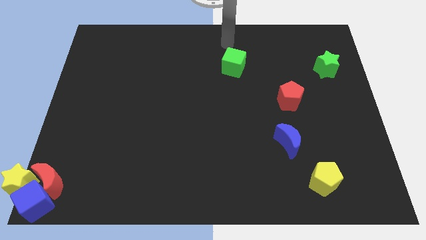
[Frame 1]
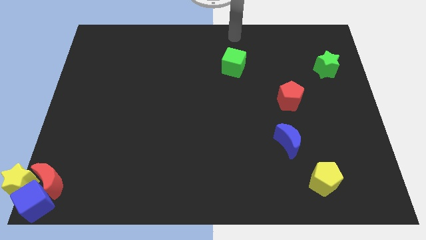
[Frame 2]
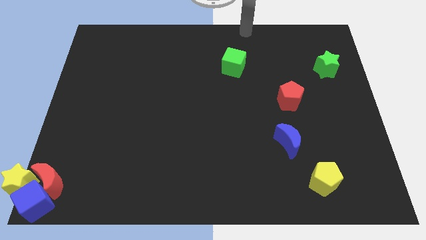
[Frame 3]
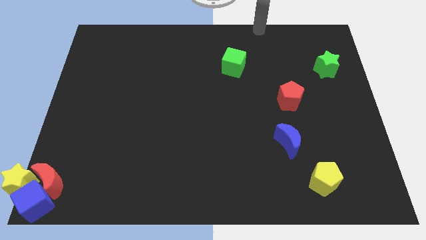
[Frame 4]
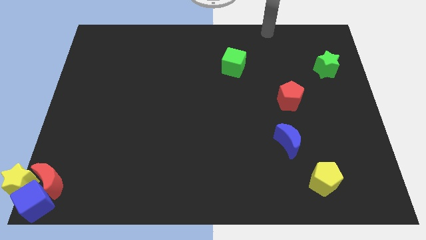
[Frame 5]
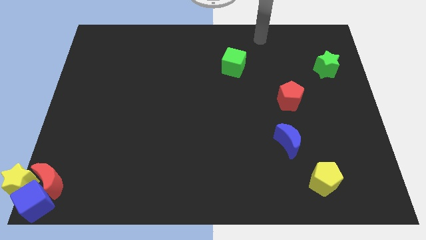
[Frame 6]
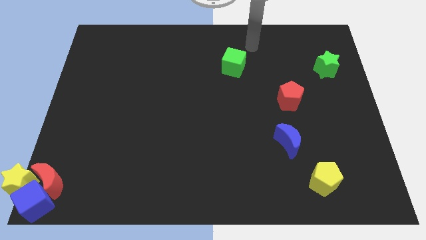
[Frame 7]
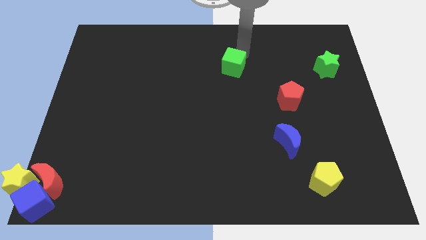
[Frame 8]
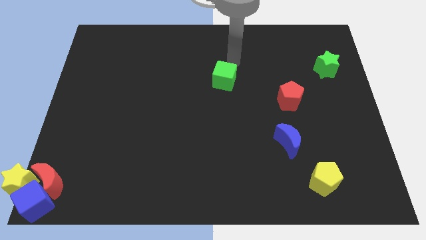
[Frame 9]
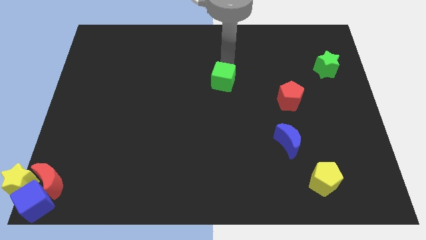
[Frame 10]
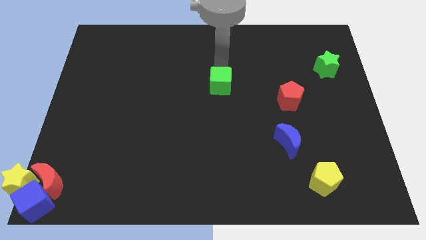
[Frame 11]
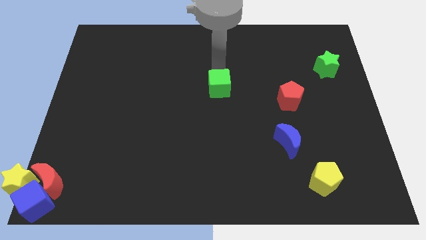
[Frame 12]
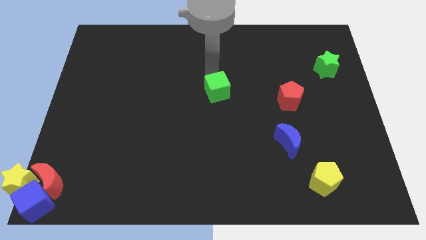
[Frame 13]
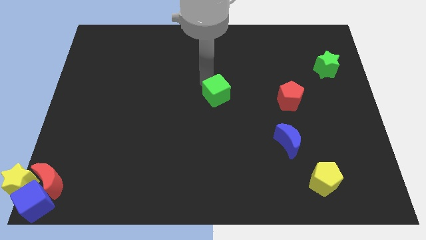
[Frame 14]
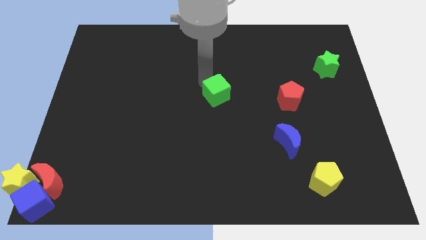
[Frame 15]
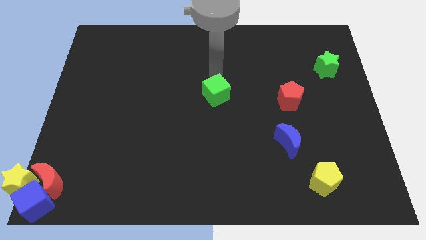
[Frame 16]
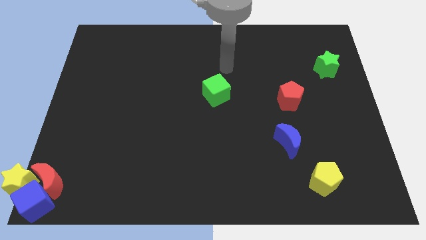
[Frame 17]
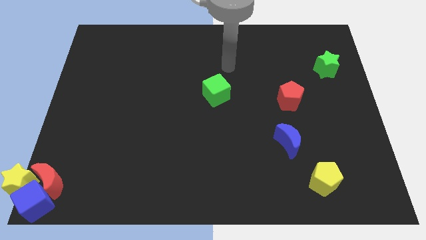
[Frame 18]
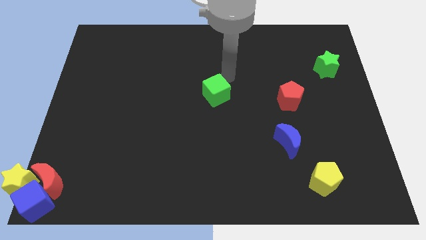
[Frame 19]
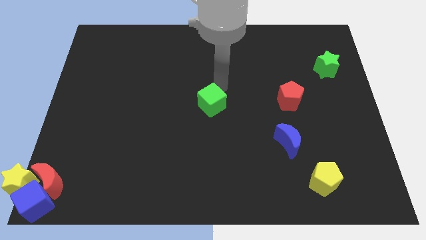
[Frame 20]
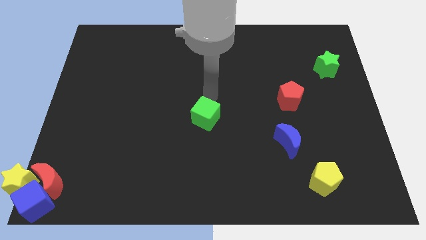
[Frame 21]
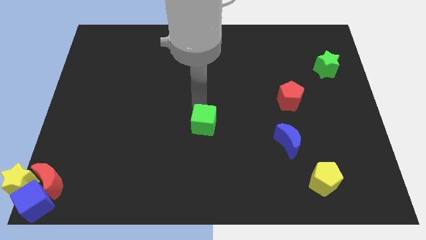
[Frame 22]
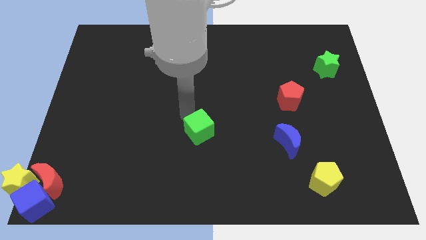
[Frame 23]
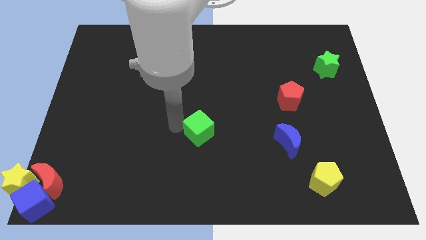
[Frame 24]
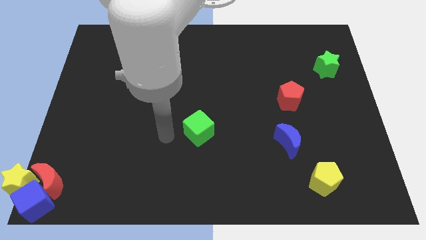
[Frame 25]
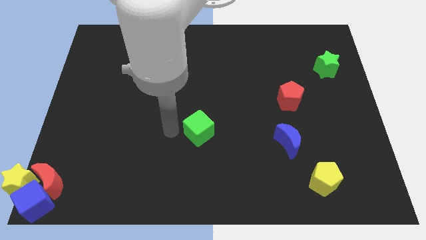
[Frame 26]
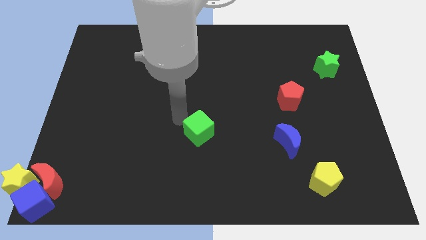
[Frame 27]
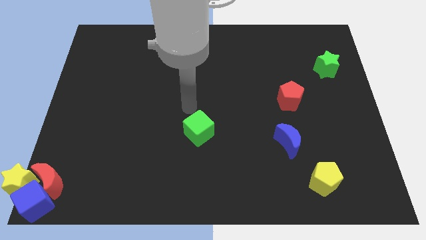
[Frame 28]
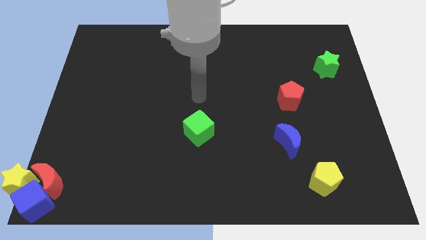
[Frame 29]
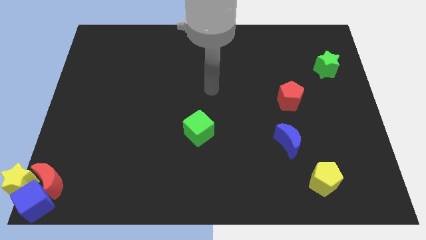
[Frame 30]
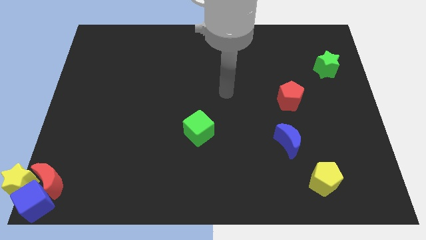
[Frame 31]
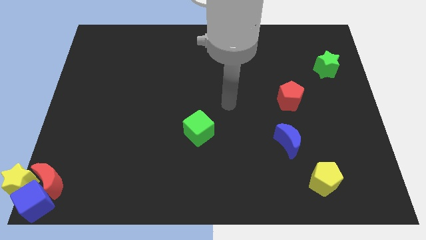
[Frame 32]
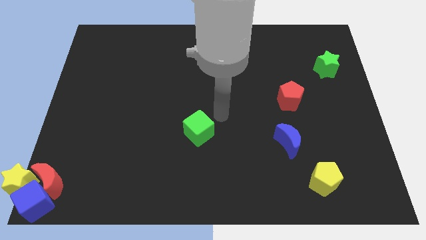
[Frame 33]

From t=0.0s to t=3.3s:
place the green cube to the middle of the board

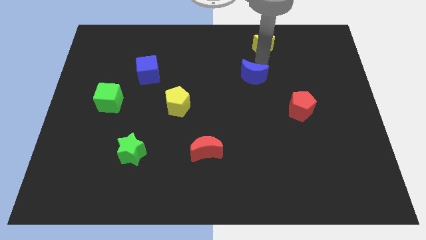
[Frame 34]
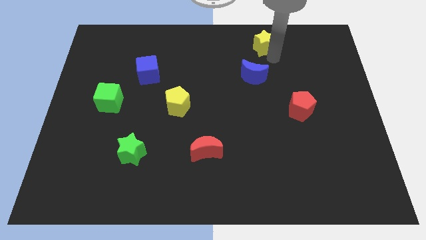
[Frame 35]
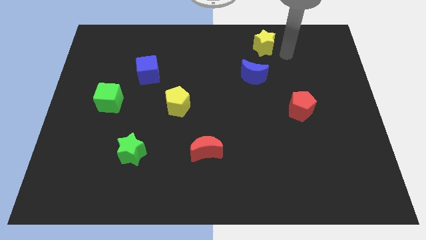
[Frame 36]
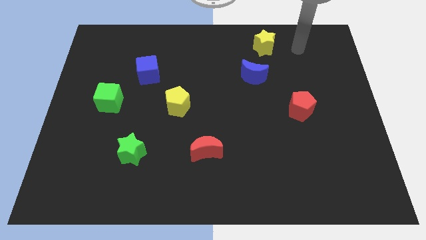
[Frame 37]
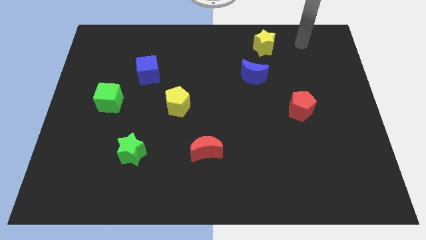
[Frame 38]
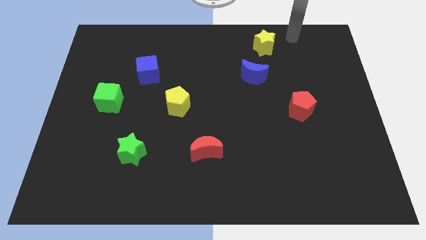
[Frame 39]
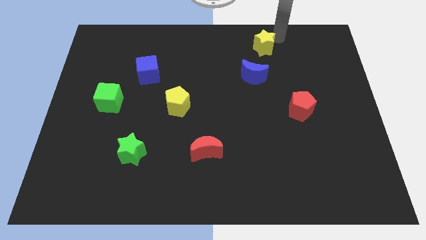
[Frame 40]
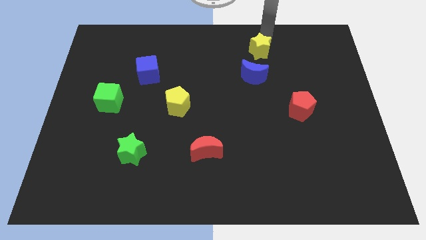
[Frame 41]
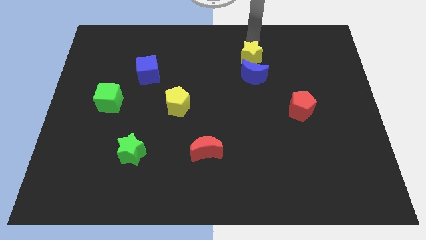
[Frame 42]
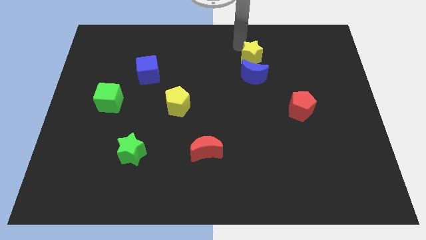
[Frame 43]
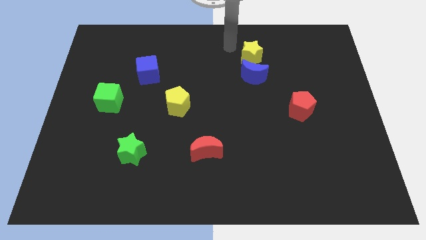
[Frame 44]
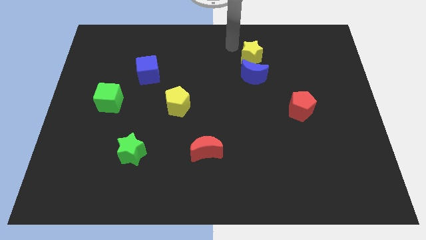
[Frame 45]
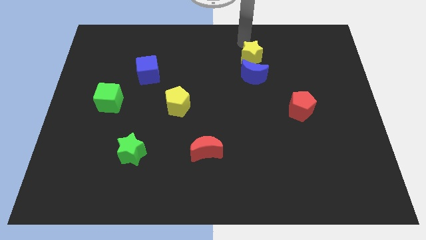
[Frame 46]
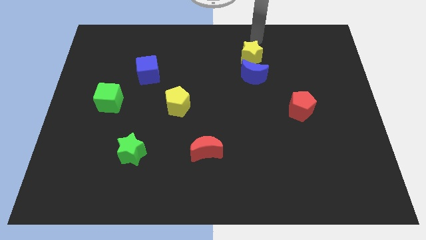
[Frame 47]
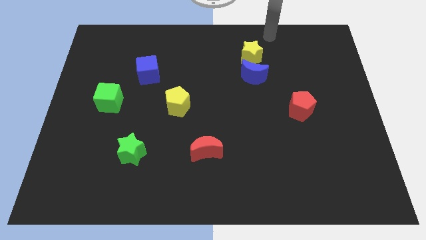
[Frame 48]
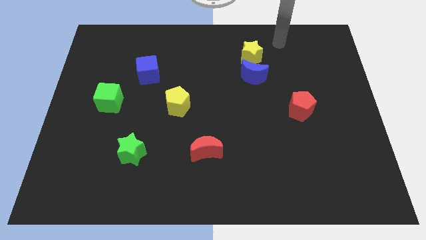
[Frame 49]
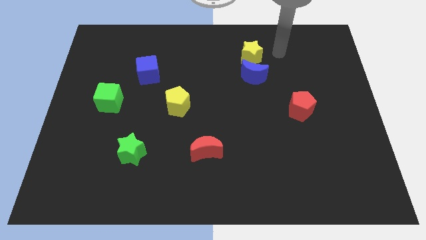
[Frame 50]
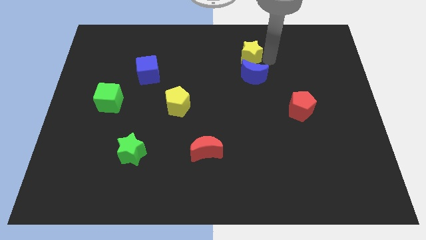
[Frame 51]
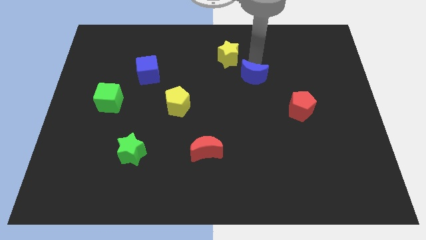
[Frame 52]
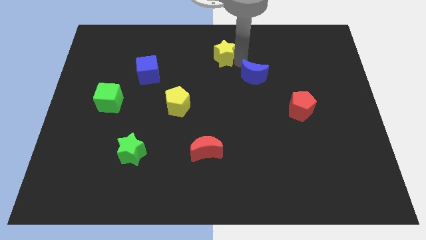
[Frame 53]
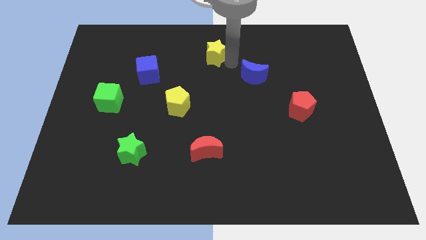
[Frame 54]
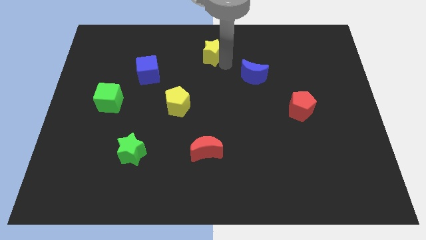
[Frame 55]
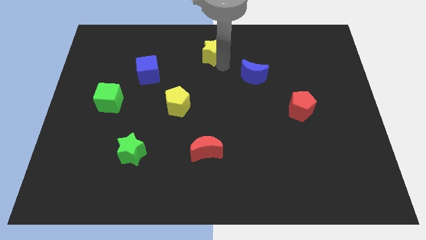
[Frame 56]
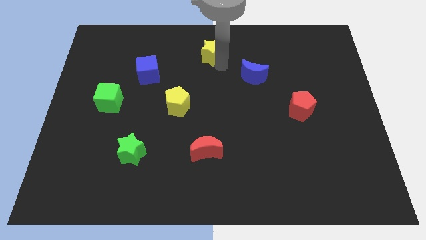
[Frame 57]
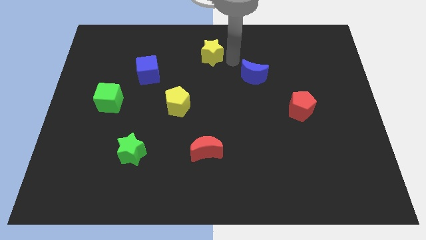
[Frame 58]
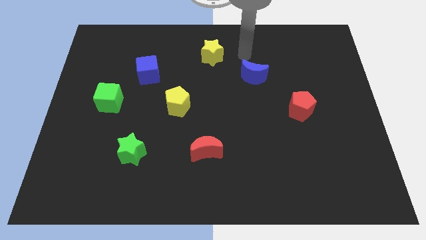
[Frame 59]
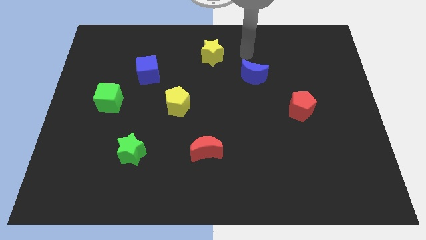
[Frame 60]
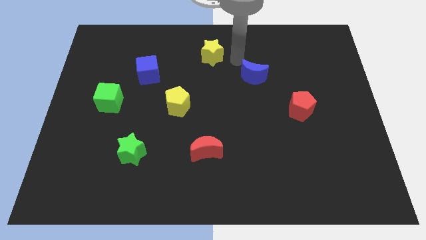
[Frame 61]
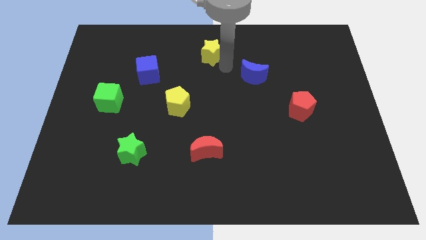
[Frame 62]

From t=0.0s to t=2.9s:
place yellow star vertical to red moon

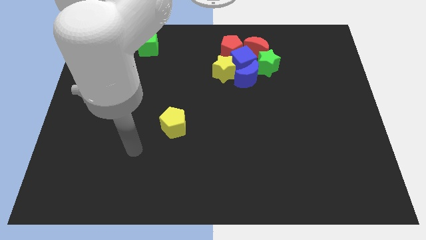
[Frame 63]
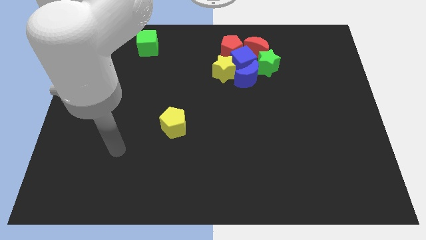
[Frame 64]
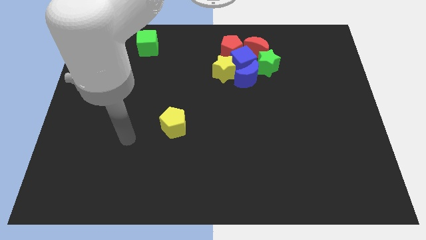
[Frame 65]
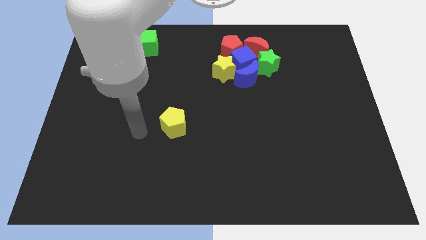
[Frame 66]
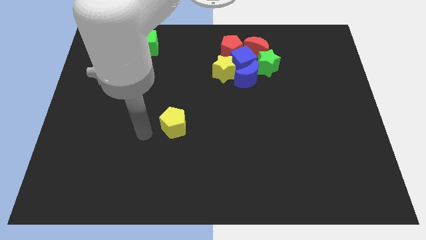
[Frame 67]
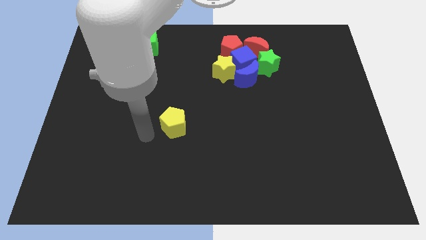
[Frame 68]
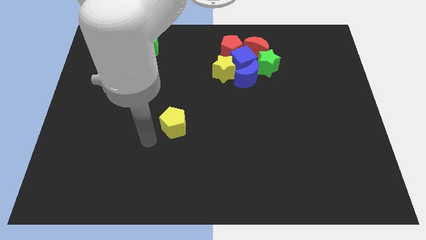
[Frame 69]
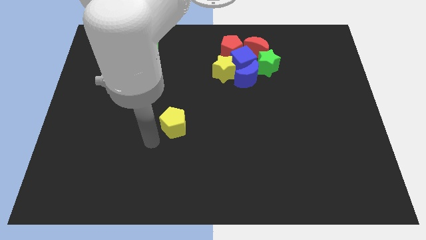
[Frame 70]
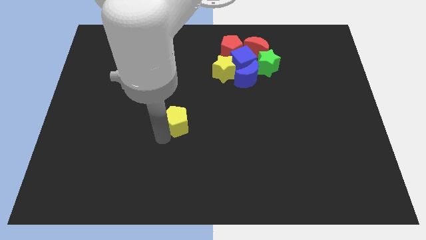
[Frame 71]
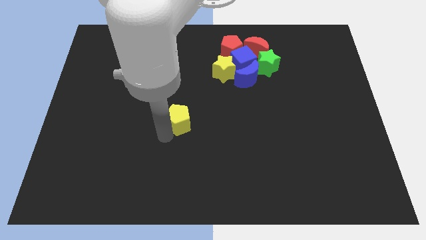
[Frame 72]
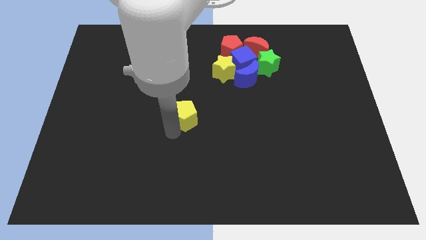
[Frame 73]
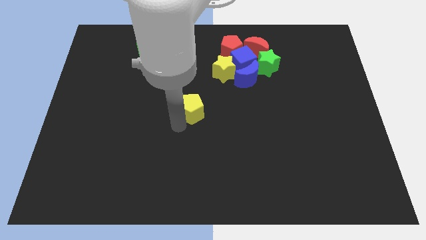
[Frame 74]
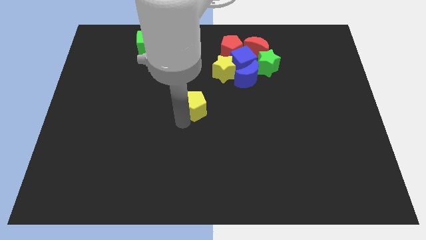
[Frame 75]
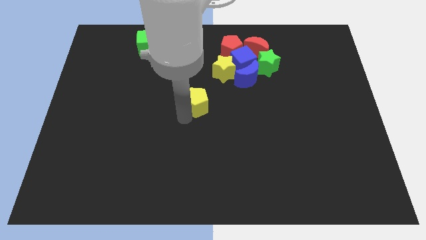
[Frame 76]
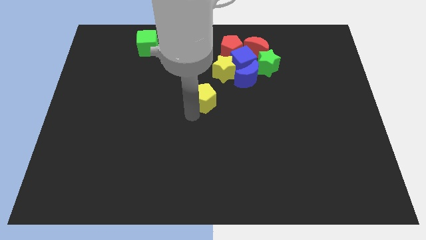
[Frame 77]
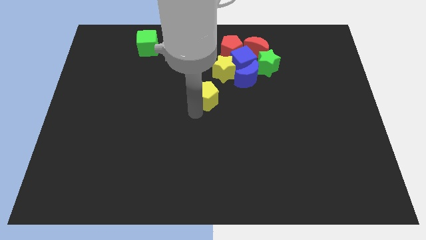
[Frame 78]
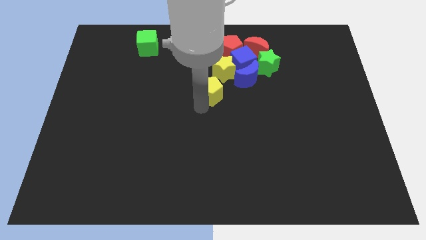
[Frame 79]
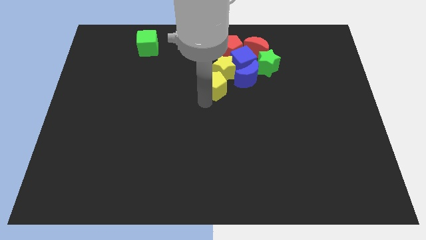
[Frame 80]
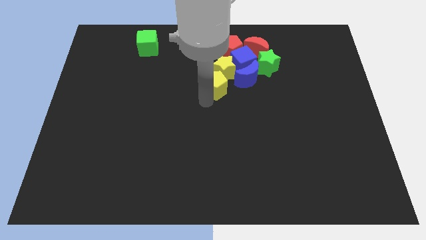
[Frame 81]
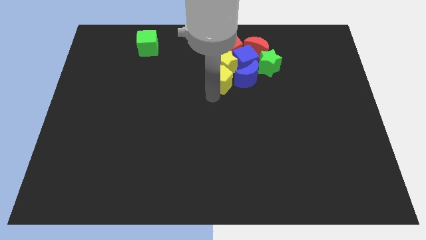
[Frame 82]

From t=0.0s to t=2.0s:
push the yellow pentagon close to the yellow star

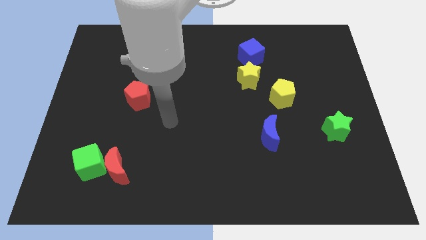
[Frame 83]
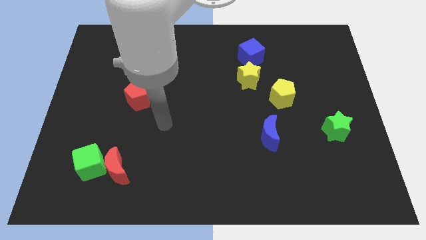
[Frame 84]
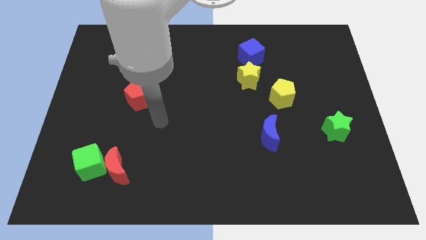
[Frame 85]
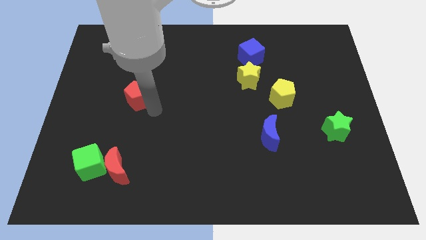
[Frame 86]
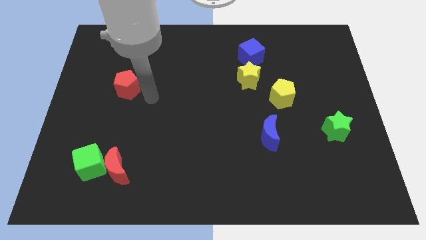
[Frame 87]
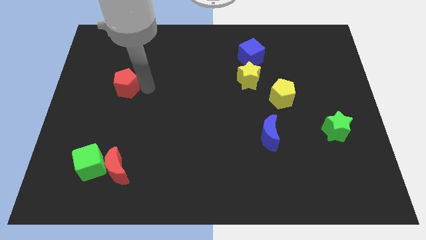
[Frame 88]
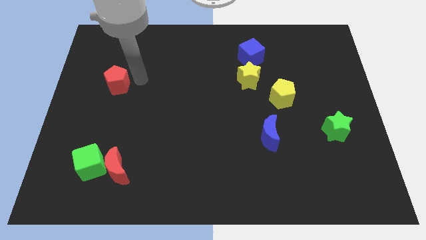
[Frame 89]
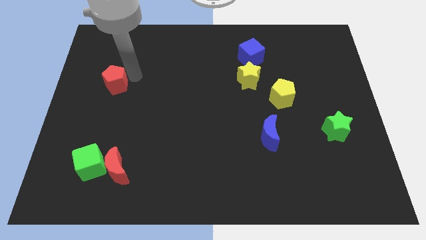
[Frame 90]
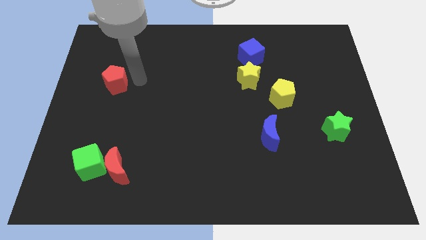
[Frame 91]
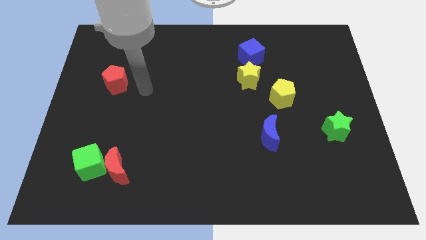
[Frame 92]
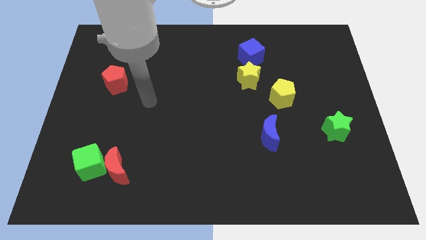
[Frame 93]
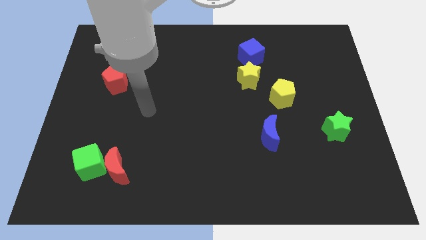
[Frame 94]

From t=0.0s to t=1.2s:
place the red pentagon vertically above the red moon
